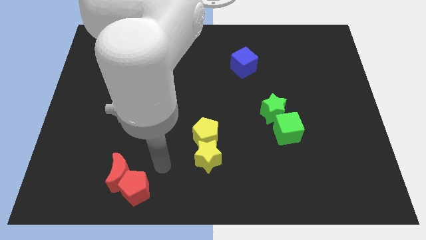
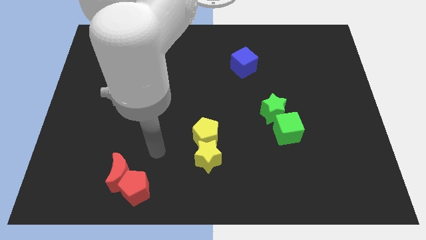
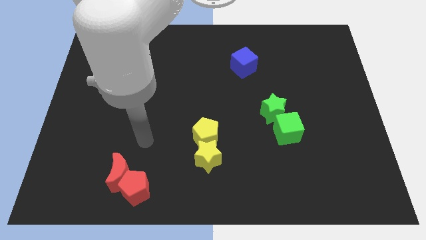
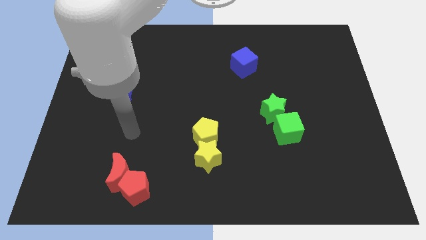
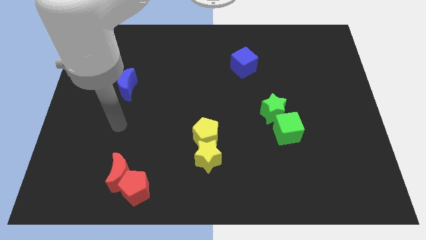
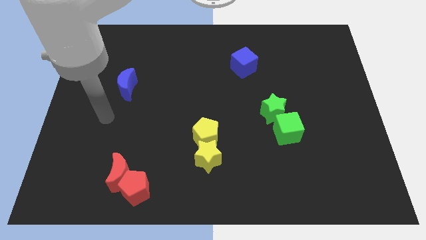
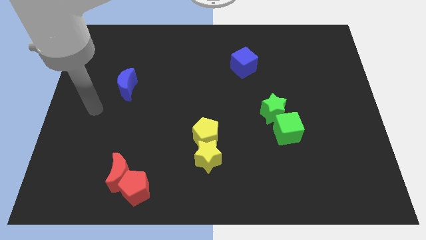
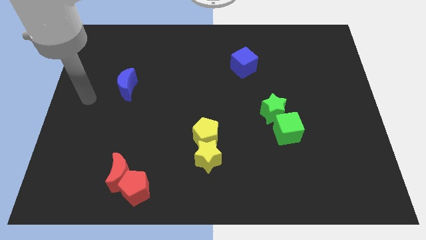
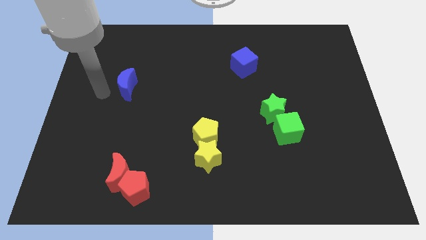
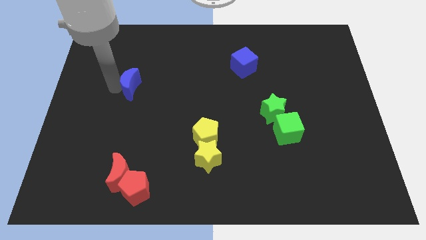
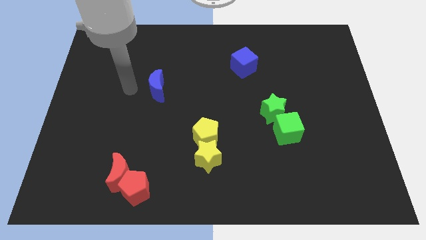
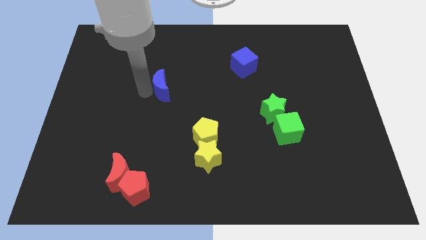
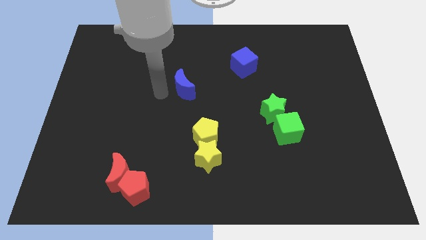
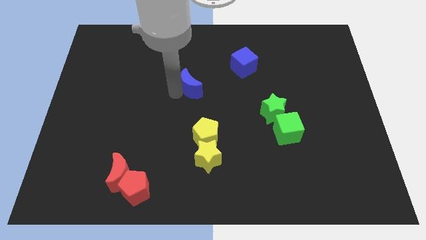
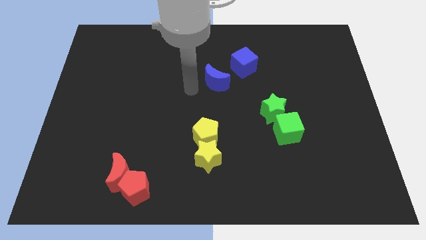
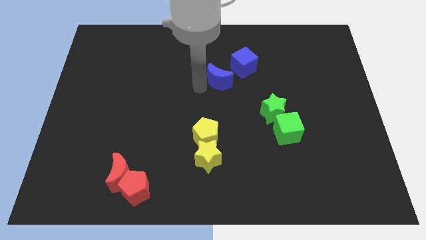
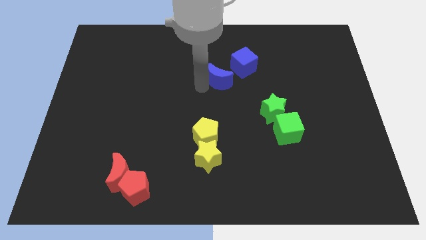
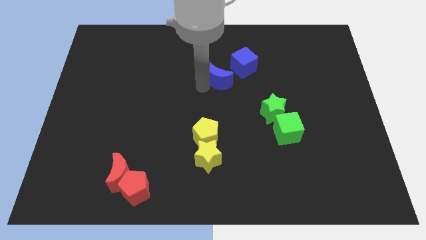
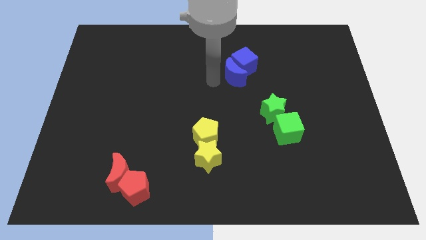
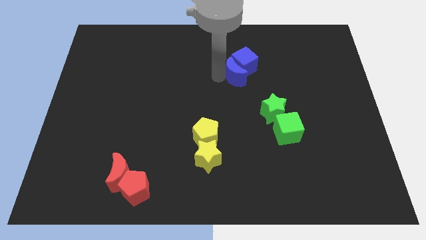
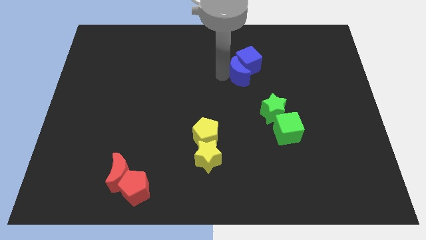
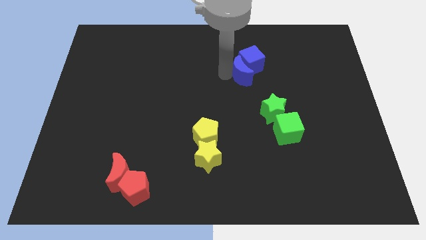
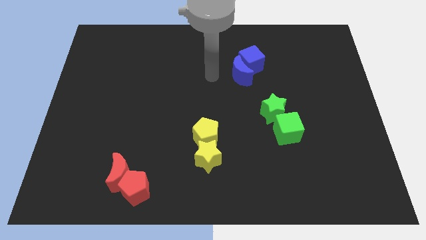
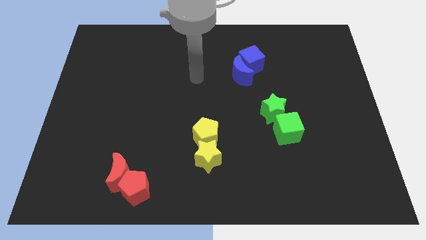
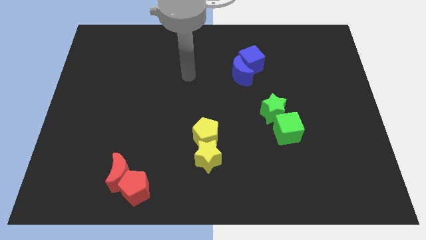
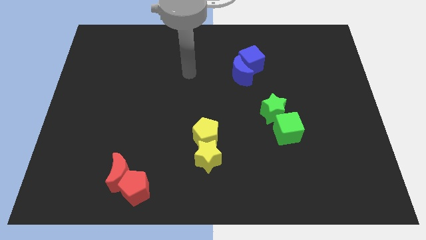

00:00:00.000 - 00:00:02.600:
push the blue crescent into blue cube

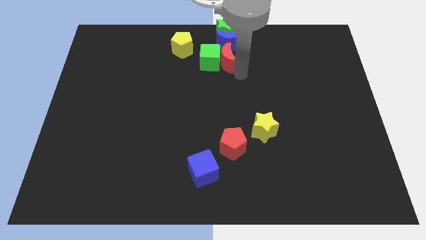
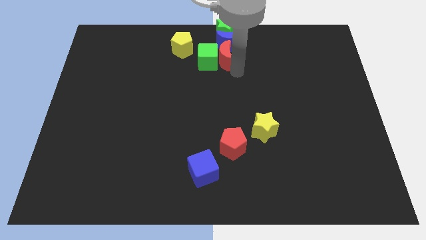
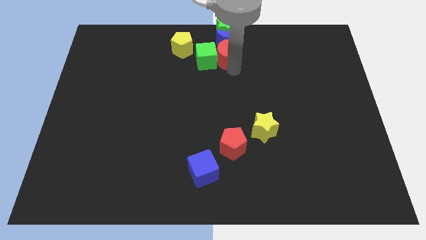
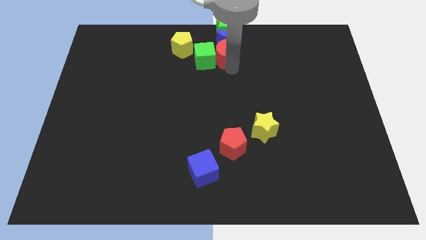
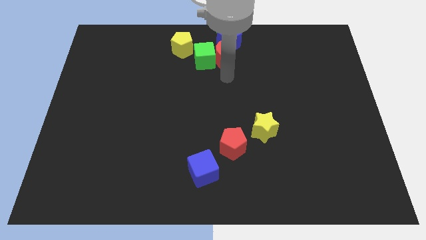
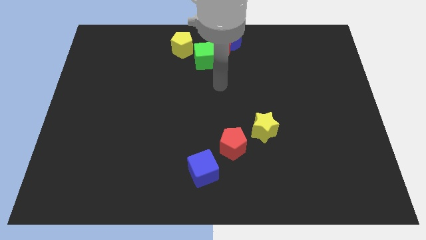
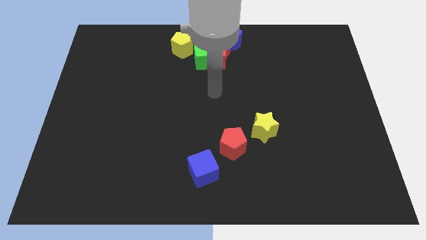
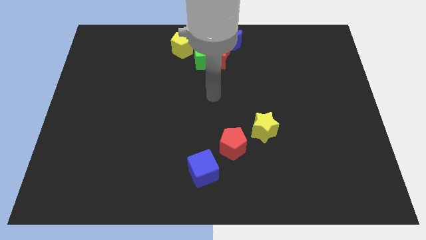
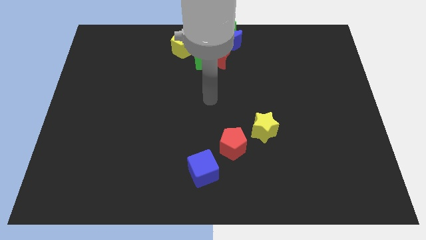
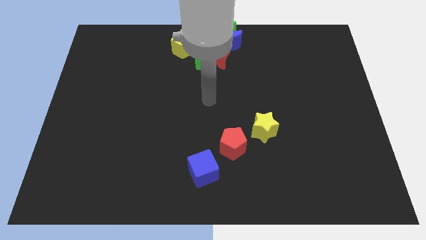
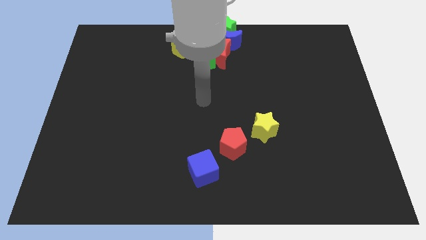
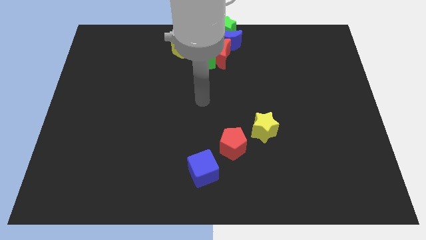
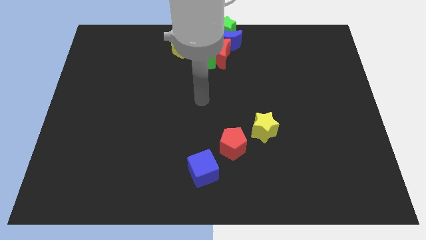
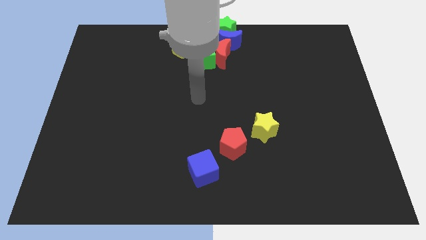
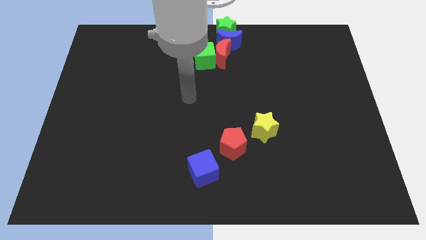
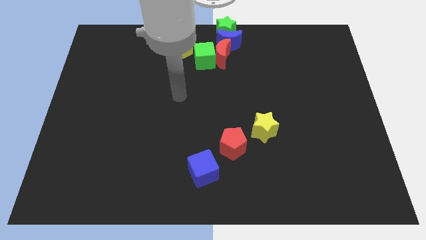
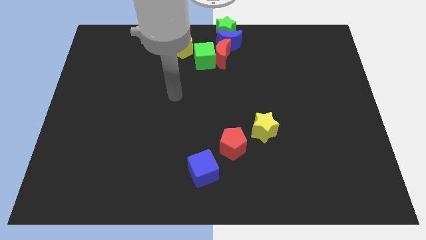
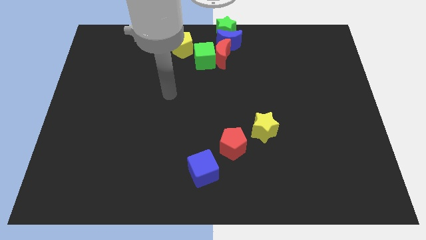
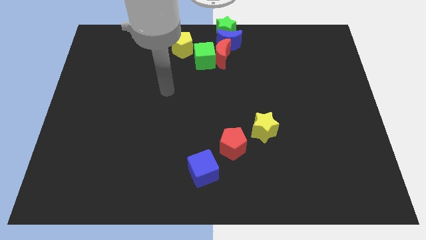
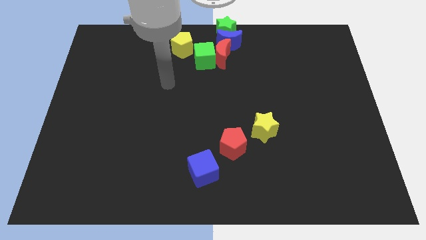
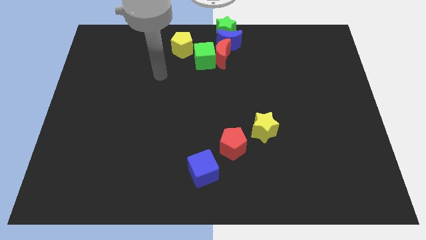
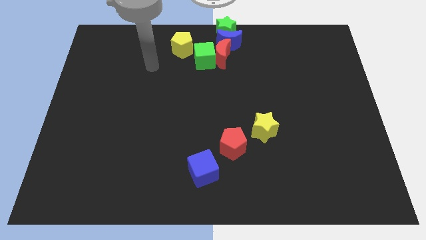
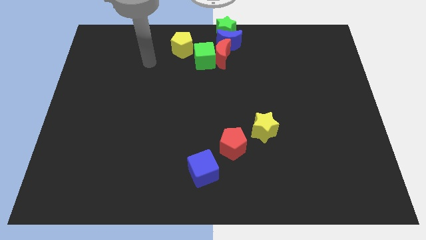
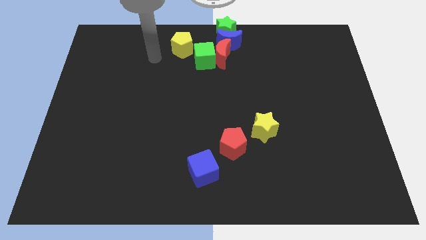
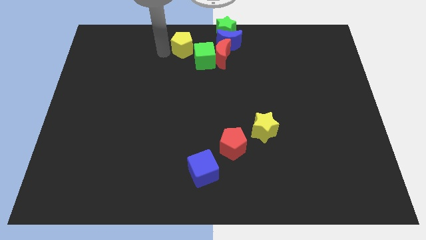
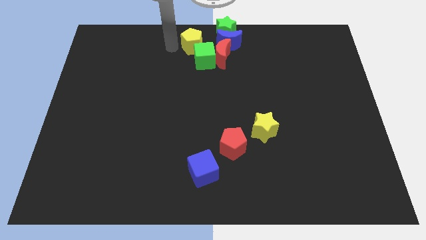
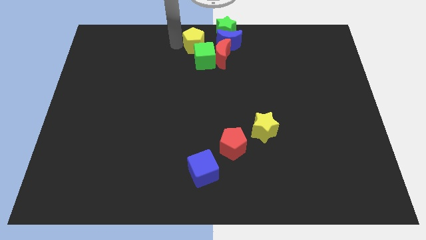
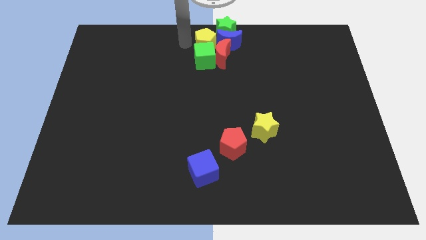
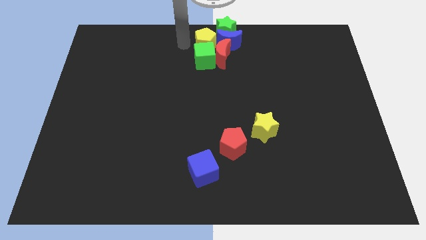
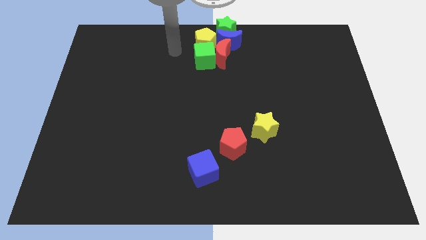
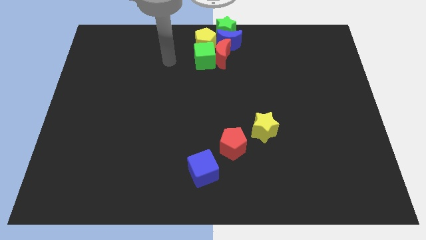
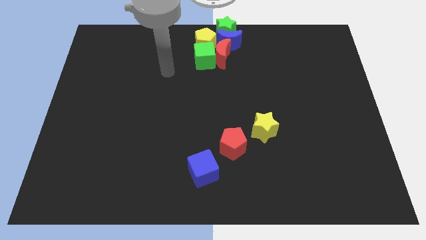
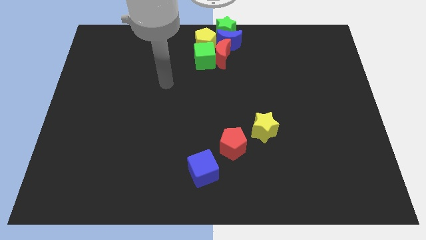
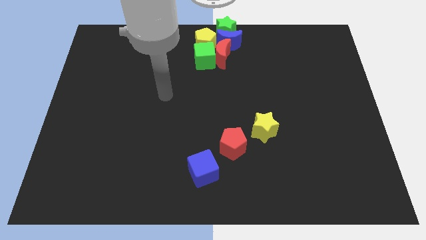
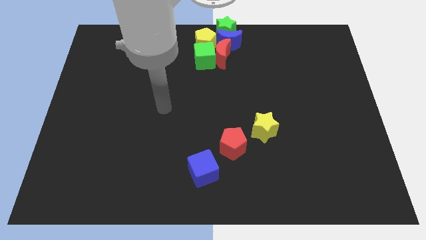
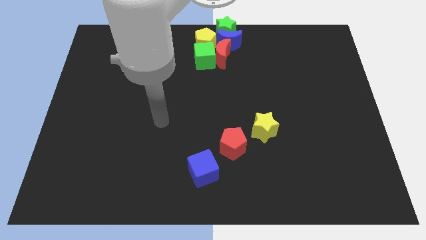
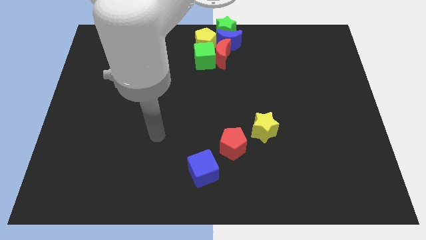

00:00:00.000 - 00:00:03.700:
put the yellow pentagon into the top centre of the board

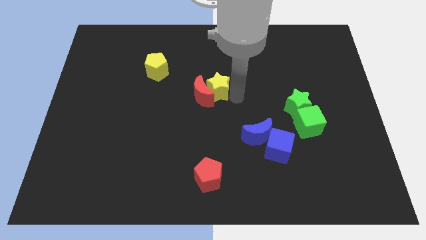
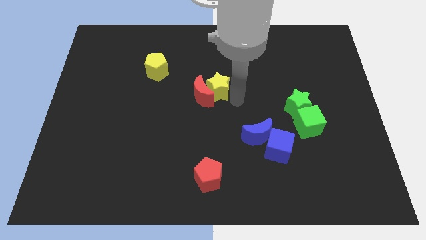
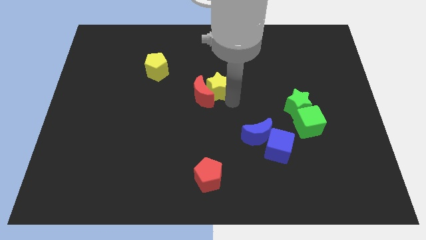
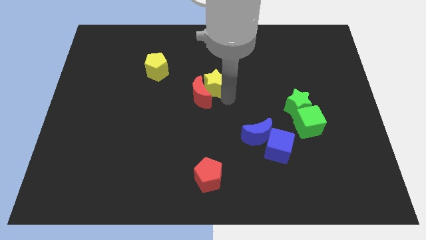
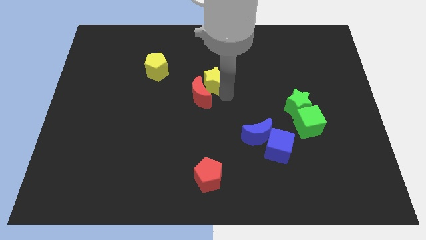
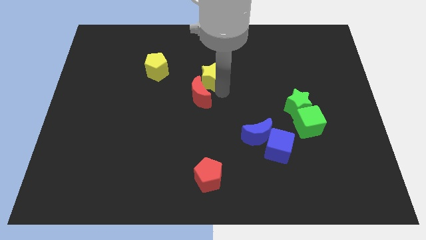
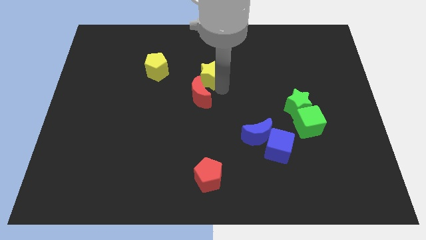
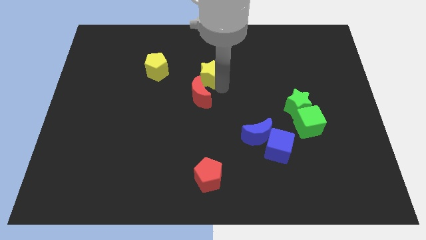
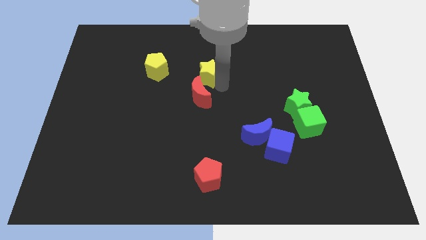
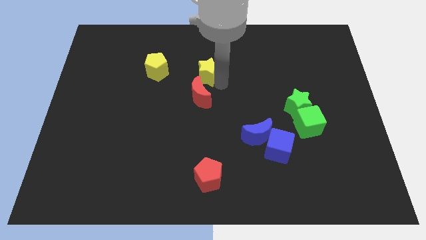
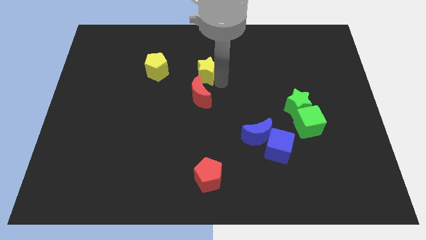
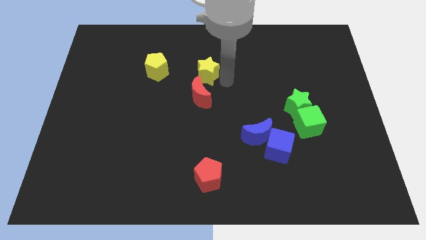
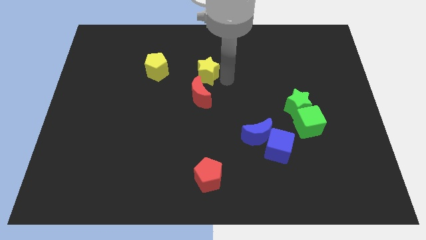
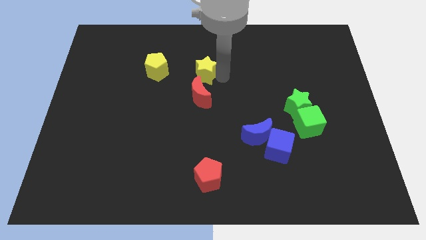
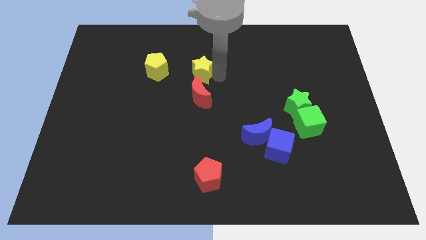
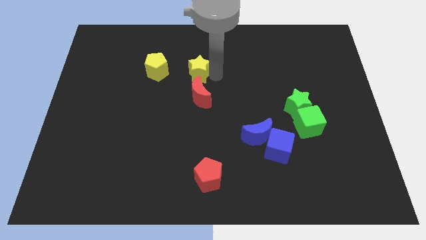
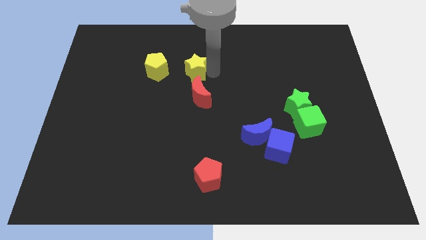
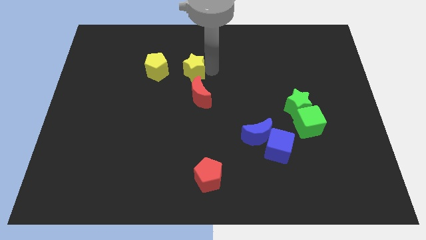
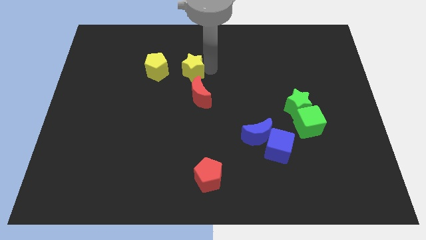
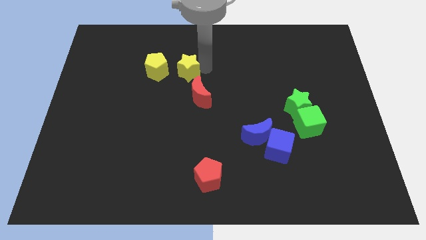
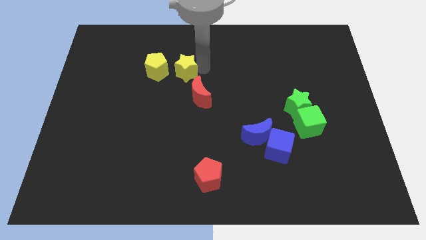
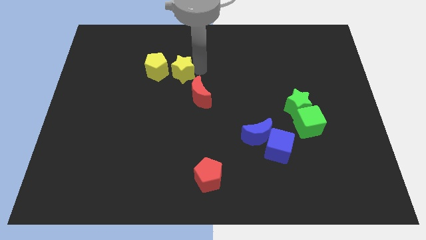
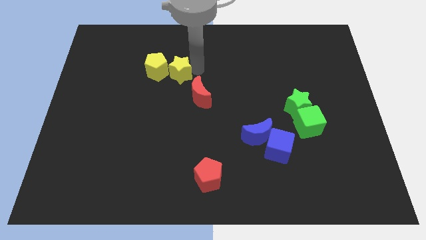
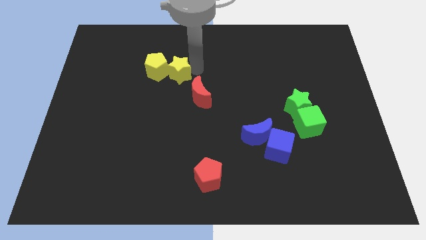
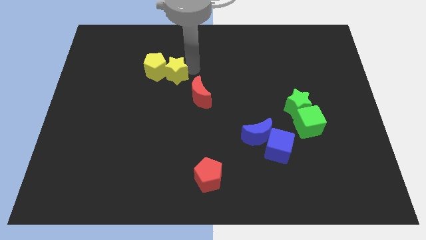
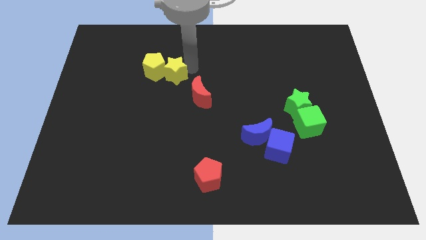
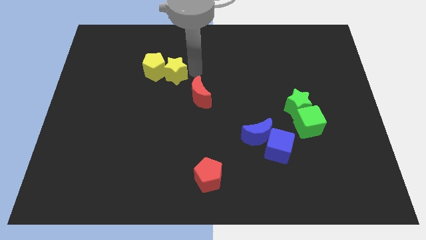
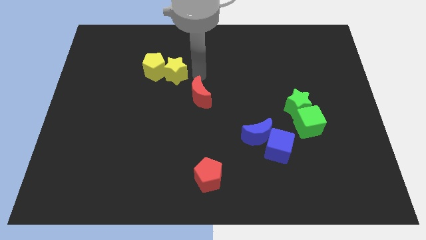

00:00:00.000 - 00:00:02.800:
push the yellow star into the yellow pentagon
